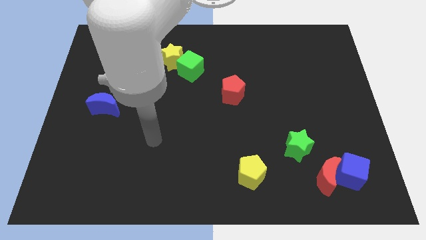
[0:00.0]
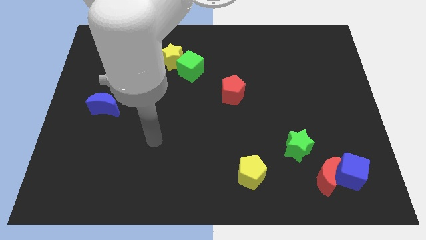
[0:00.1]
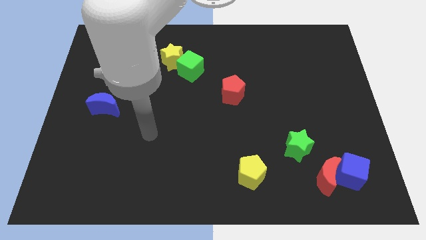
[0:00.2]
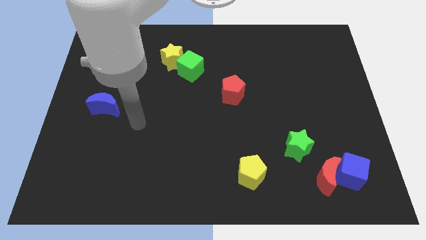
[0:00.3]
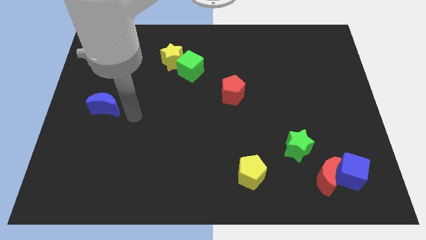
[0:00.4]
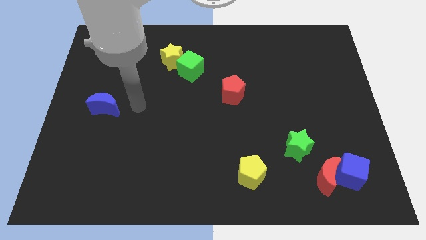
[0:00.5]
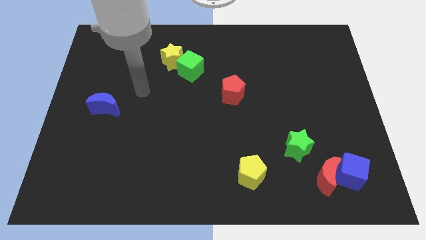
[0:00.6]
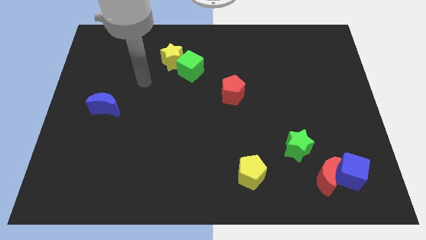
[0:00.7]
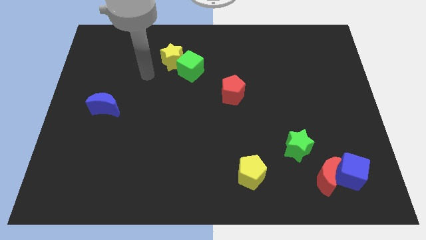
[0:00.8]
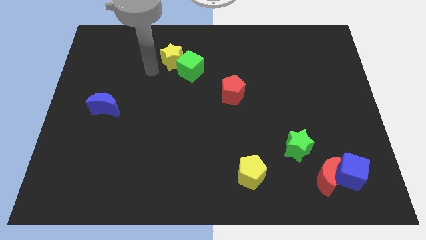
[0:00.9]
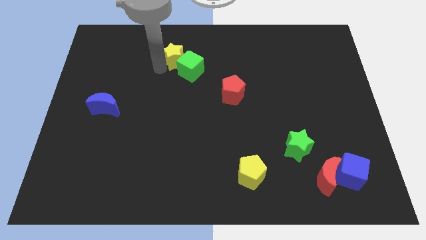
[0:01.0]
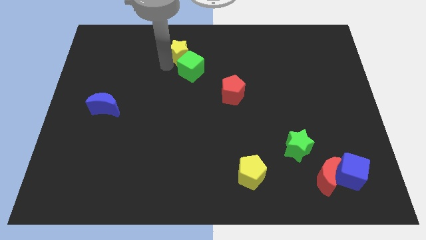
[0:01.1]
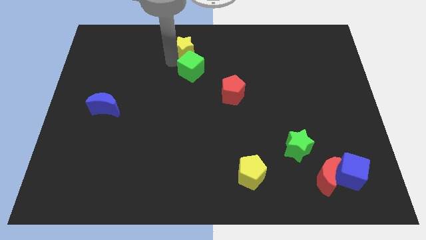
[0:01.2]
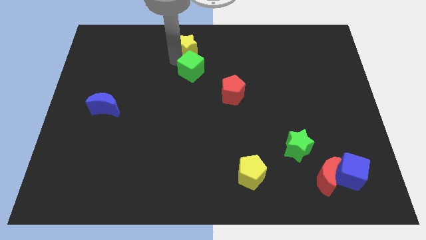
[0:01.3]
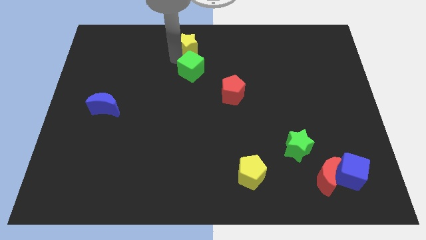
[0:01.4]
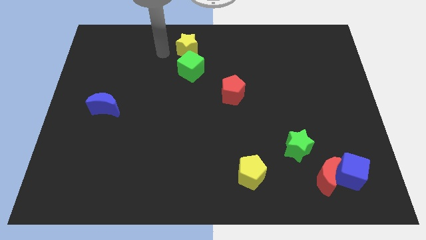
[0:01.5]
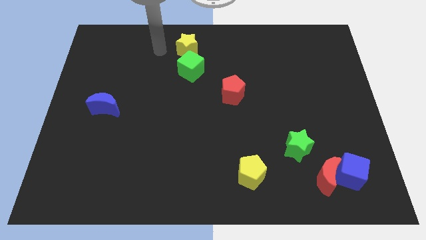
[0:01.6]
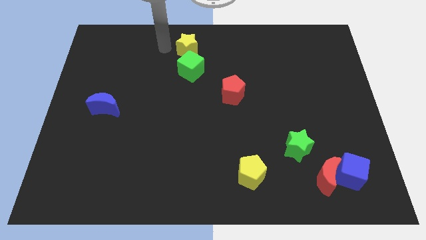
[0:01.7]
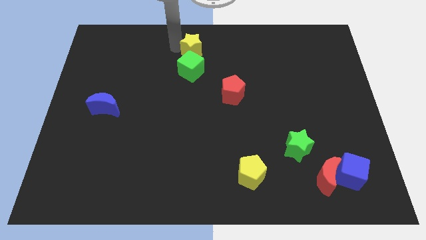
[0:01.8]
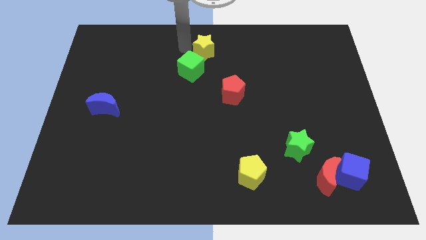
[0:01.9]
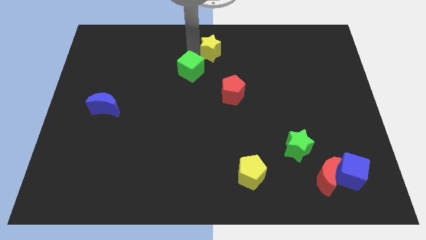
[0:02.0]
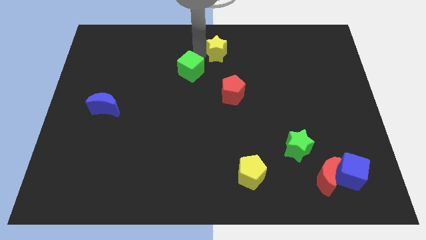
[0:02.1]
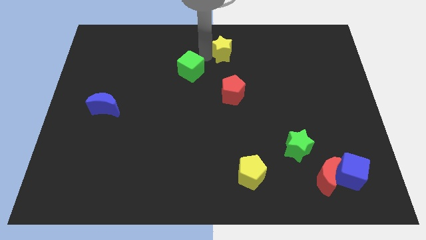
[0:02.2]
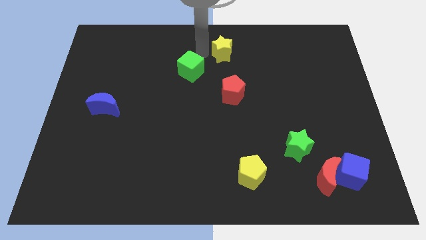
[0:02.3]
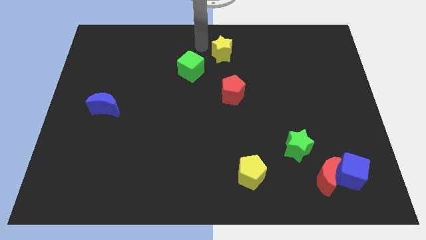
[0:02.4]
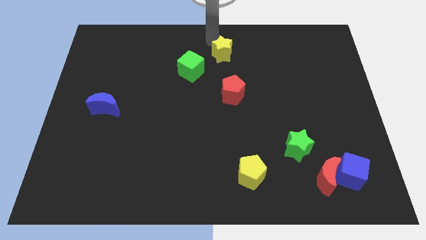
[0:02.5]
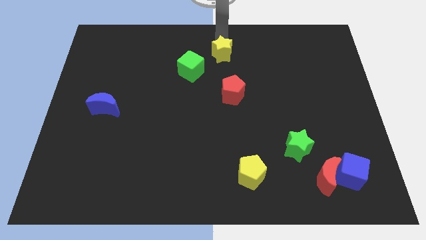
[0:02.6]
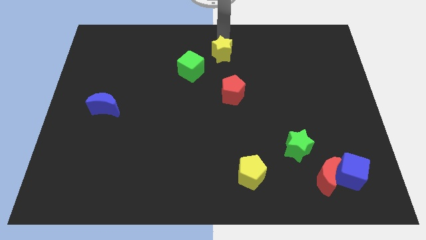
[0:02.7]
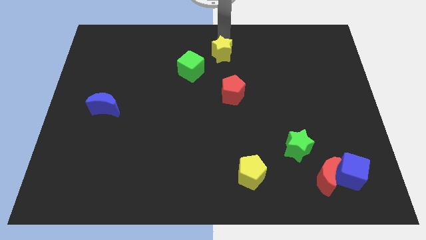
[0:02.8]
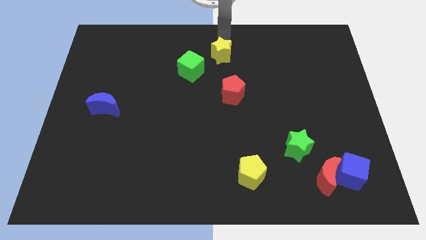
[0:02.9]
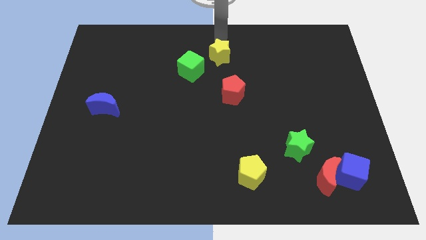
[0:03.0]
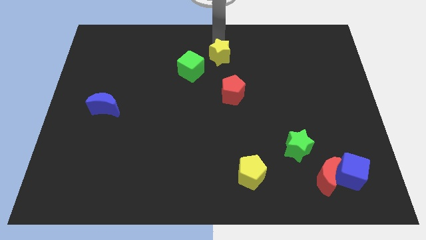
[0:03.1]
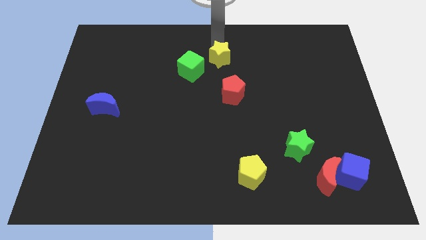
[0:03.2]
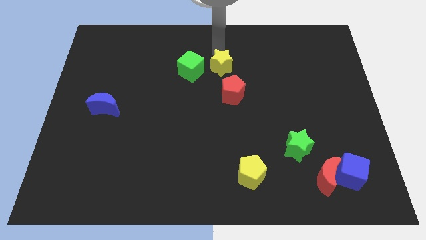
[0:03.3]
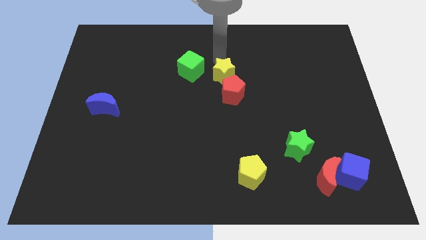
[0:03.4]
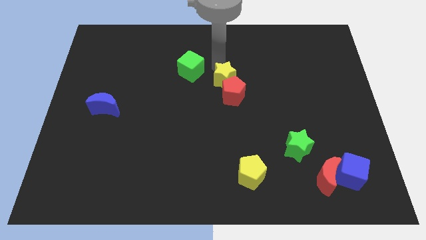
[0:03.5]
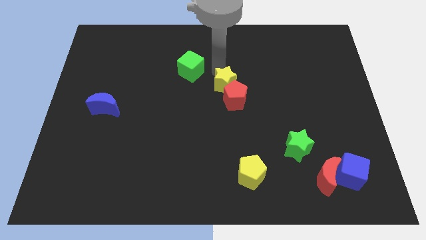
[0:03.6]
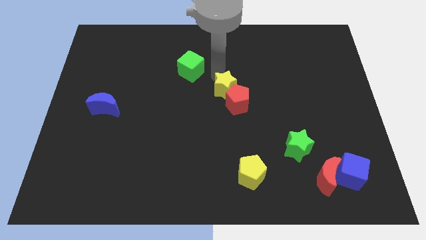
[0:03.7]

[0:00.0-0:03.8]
slide the yellow star close to the red pentagon

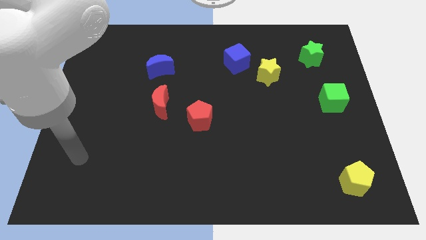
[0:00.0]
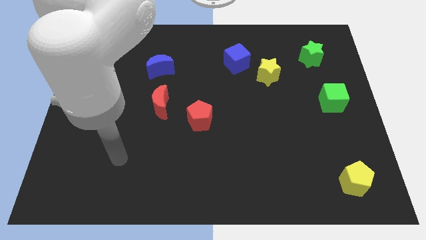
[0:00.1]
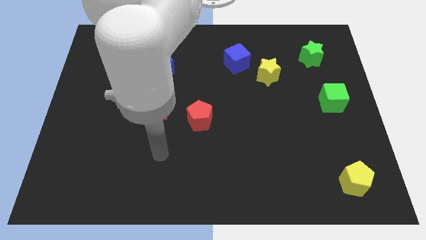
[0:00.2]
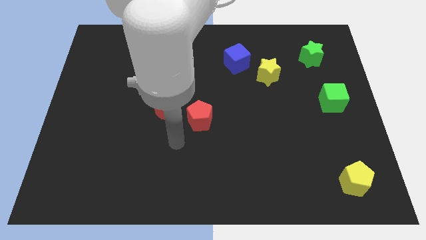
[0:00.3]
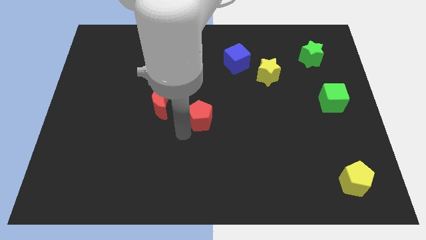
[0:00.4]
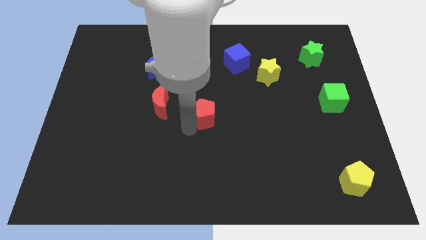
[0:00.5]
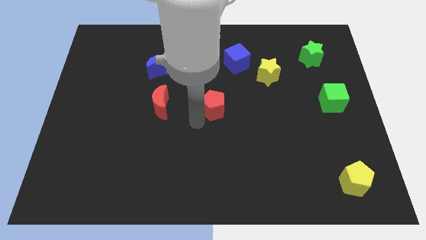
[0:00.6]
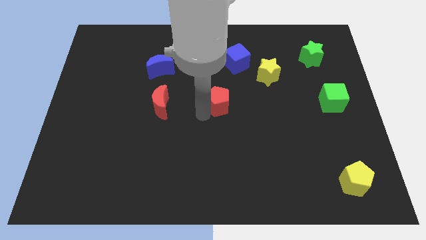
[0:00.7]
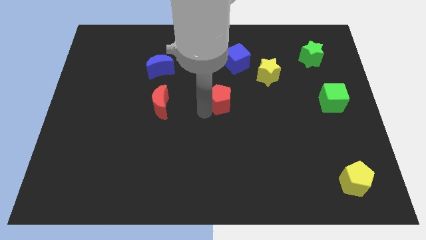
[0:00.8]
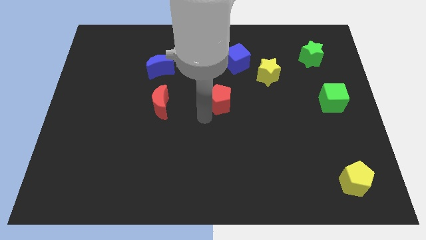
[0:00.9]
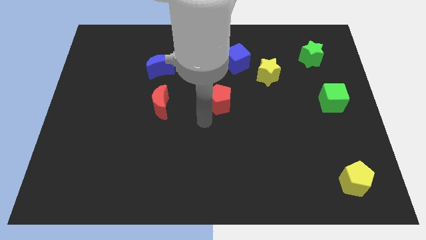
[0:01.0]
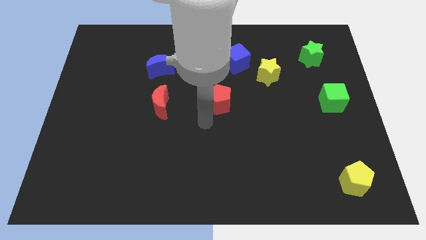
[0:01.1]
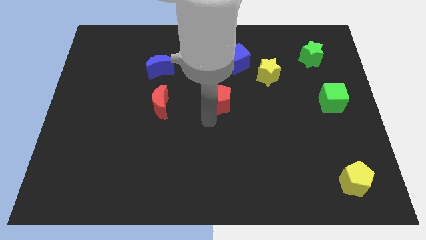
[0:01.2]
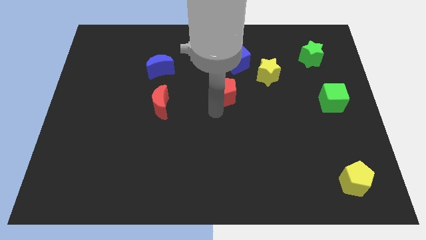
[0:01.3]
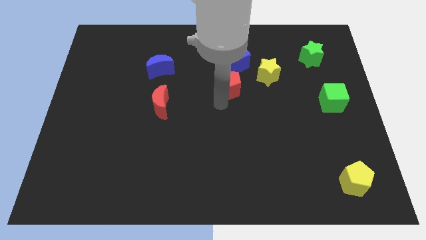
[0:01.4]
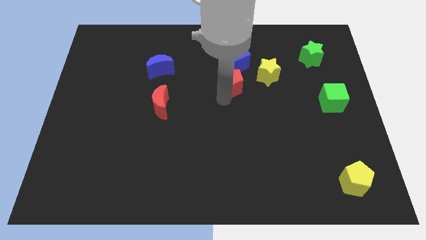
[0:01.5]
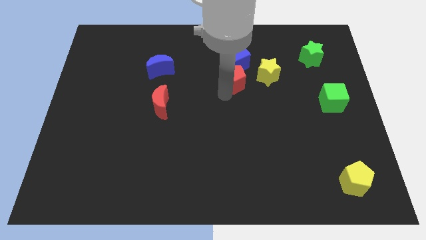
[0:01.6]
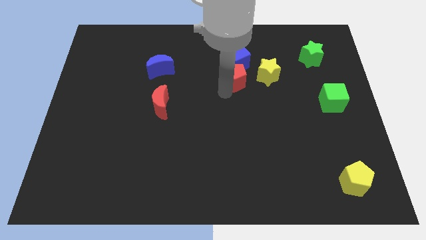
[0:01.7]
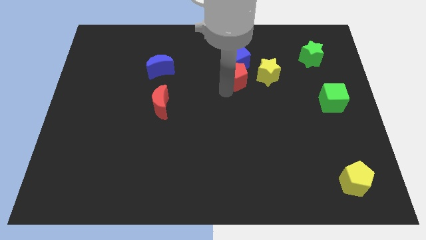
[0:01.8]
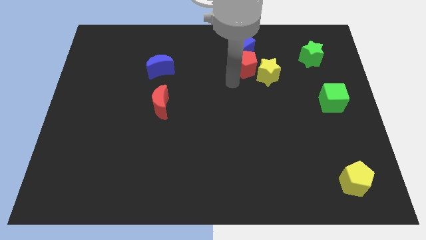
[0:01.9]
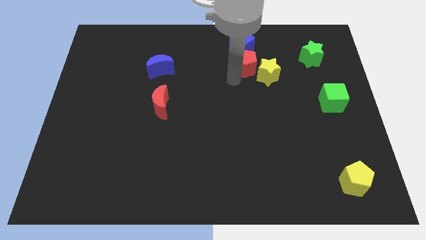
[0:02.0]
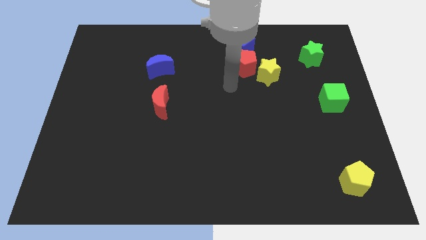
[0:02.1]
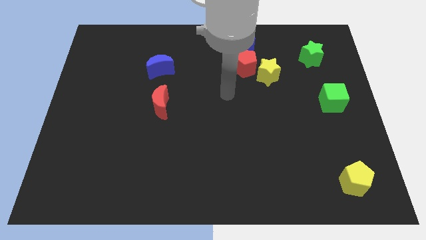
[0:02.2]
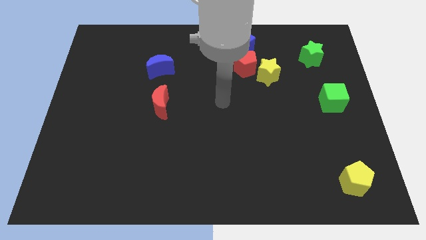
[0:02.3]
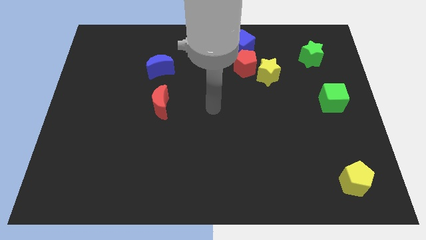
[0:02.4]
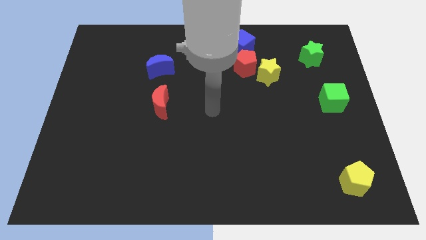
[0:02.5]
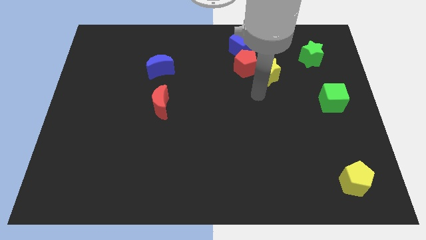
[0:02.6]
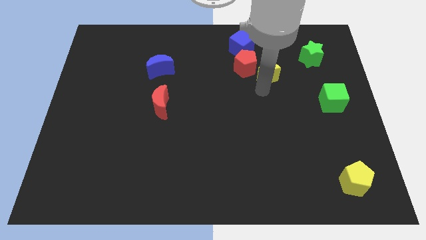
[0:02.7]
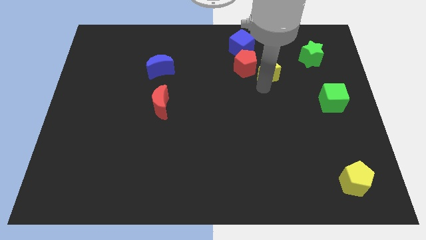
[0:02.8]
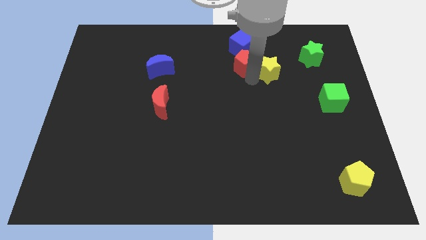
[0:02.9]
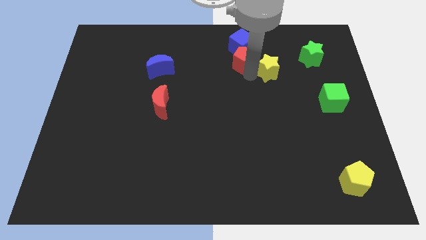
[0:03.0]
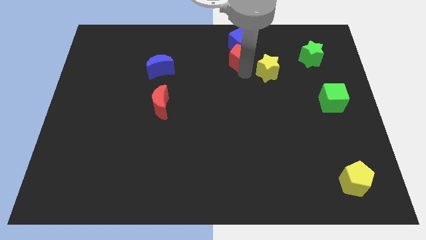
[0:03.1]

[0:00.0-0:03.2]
put the red pentagon next to the blue cube

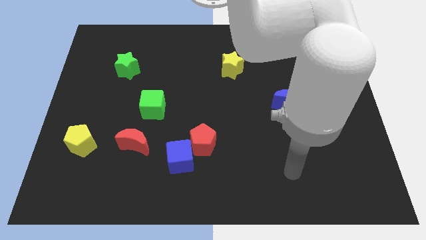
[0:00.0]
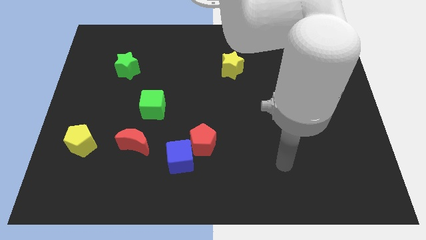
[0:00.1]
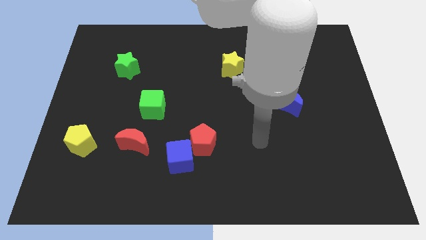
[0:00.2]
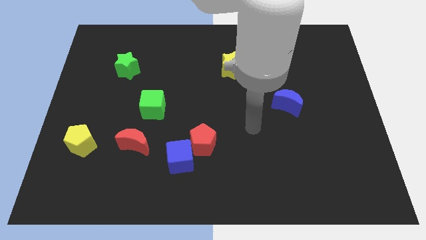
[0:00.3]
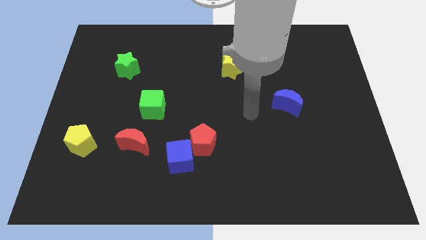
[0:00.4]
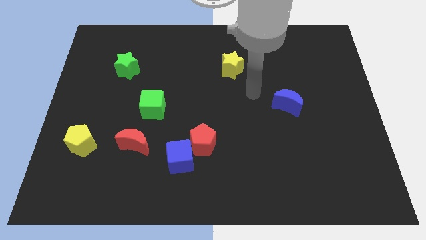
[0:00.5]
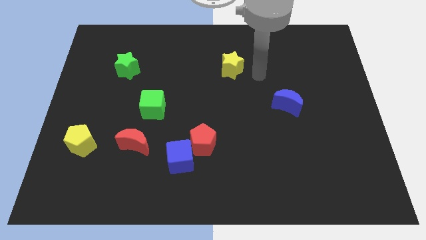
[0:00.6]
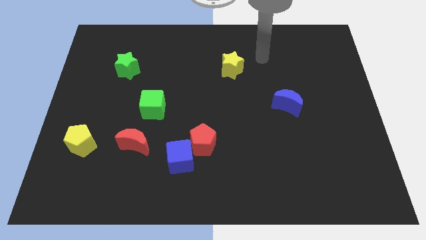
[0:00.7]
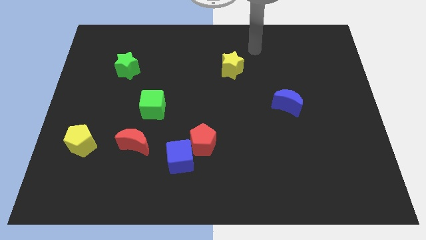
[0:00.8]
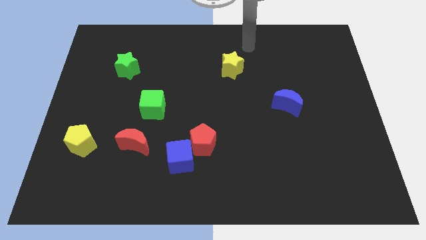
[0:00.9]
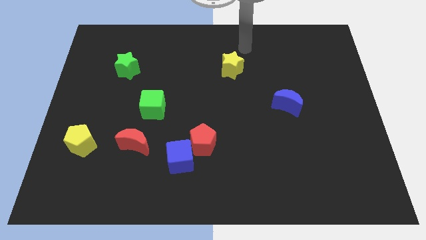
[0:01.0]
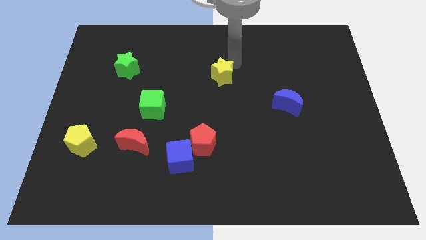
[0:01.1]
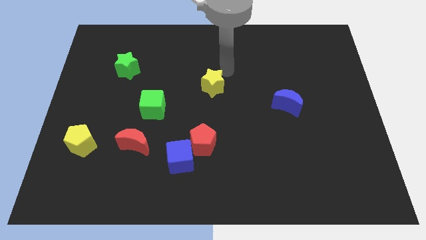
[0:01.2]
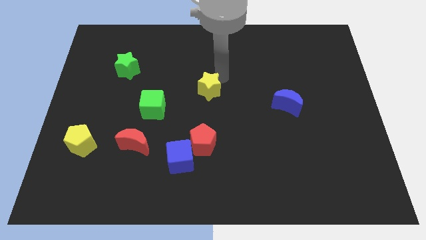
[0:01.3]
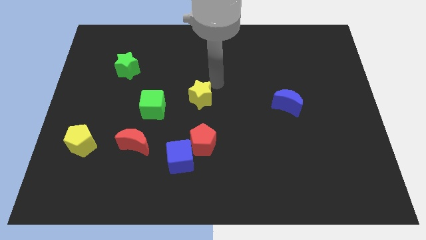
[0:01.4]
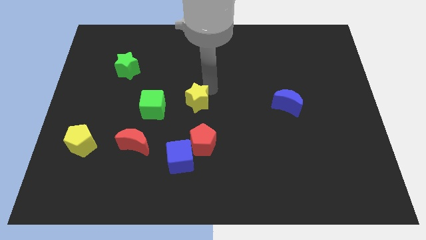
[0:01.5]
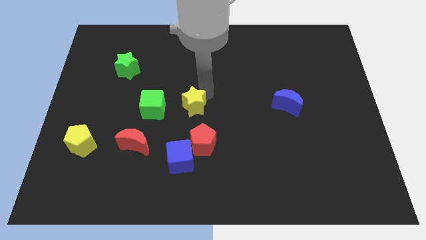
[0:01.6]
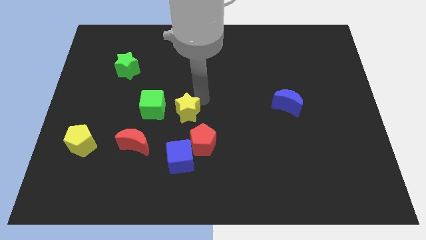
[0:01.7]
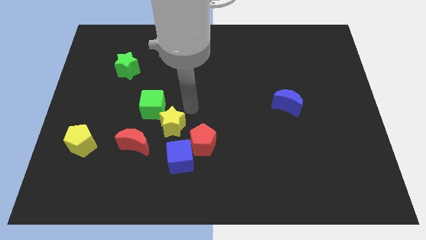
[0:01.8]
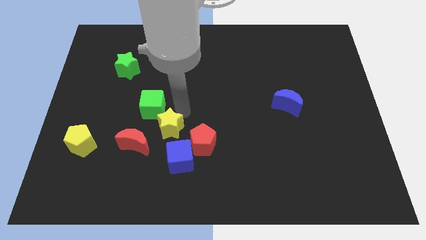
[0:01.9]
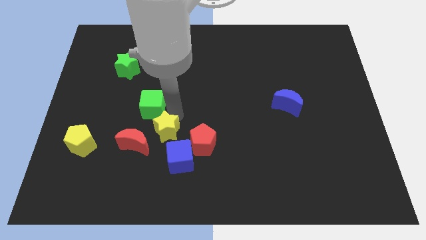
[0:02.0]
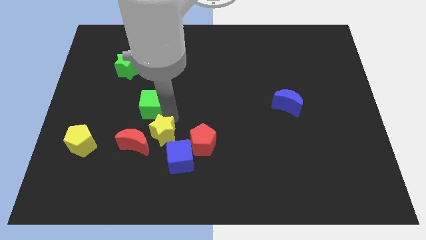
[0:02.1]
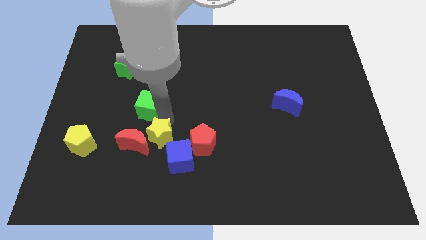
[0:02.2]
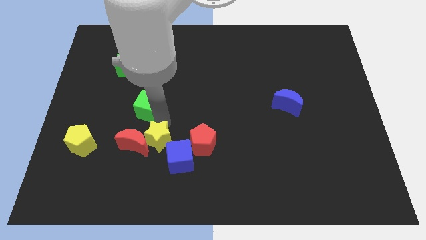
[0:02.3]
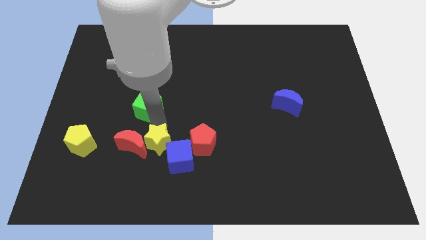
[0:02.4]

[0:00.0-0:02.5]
put the yellow star next to the red moon
